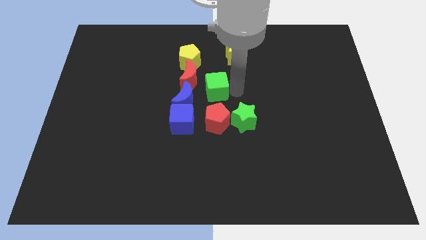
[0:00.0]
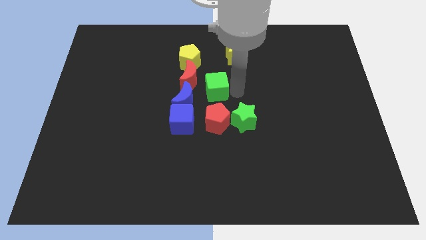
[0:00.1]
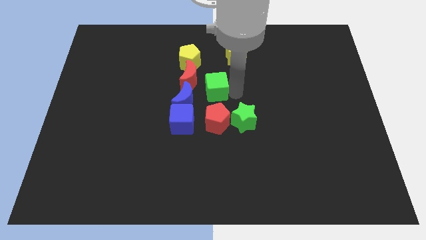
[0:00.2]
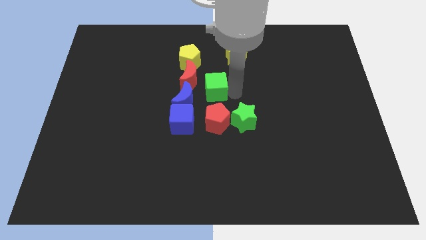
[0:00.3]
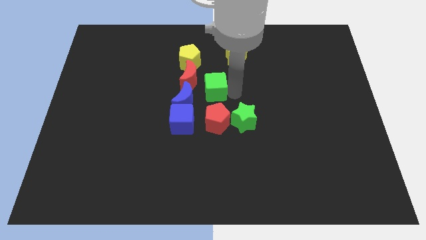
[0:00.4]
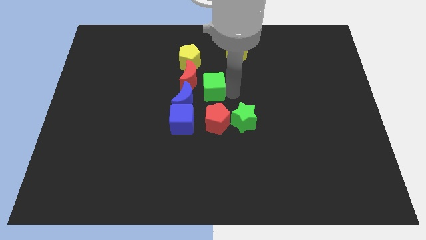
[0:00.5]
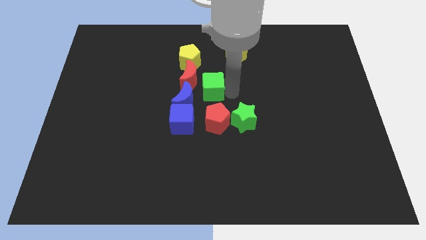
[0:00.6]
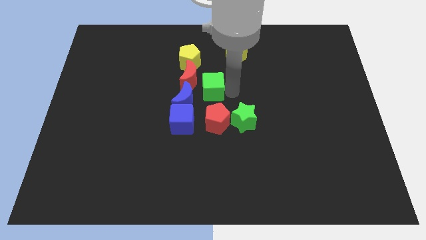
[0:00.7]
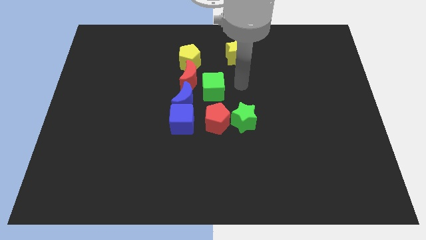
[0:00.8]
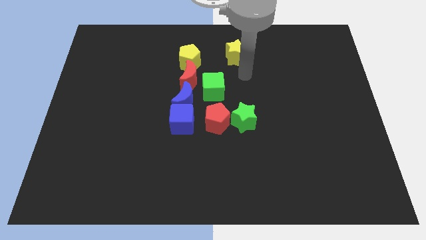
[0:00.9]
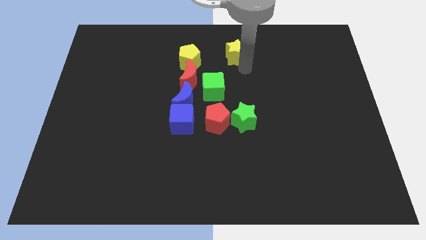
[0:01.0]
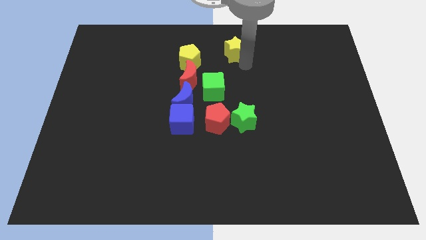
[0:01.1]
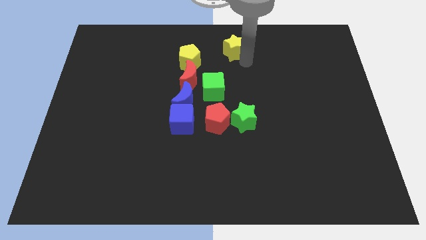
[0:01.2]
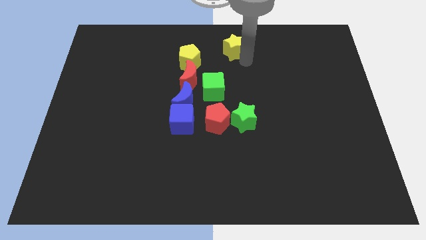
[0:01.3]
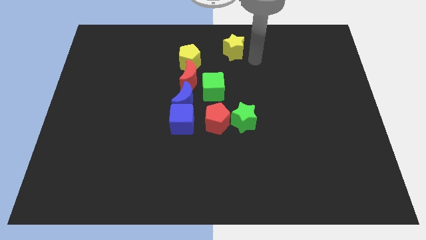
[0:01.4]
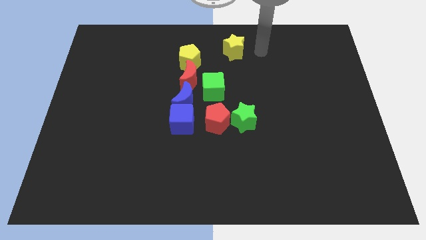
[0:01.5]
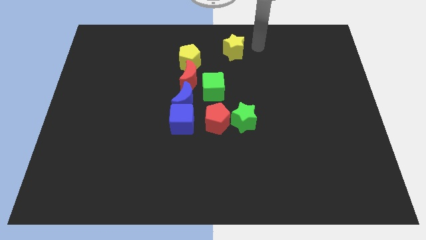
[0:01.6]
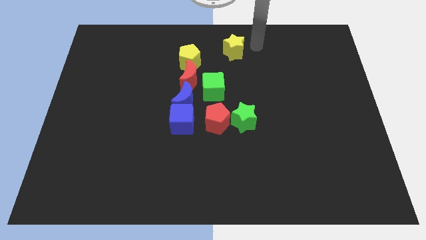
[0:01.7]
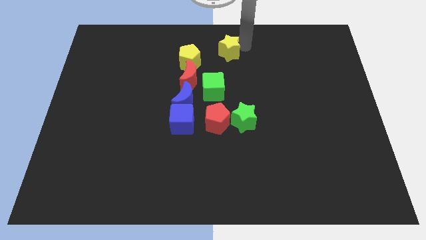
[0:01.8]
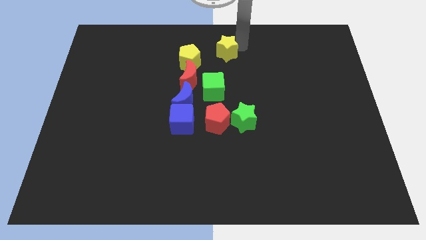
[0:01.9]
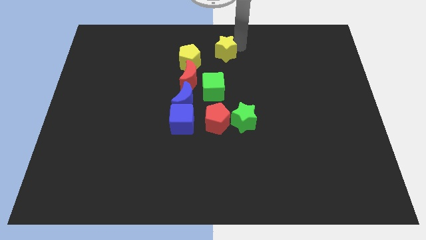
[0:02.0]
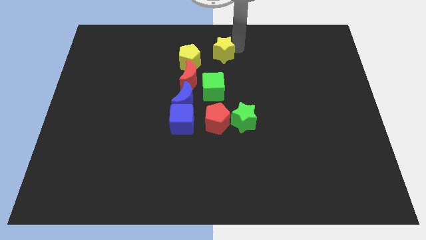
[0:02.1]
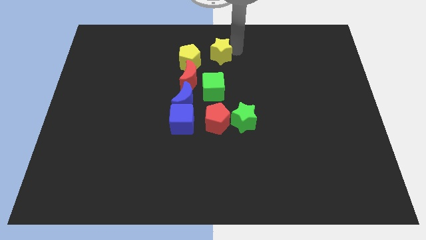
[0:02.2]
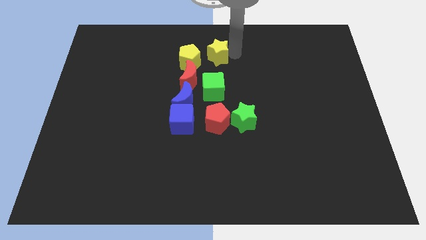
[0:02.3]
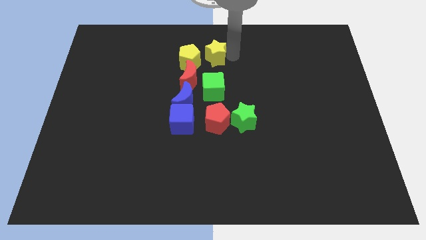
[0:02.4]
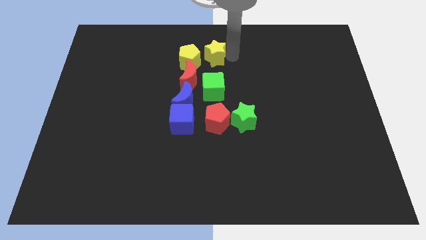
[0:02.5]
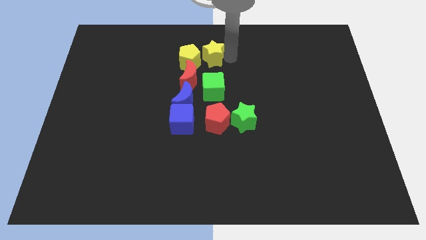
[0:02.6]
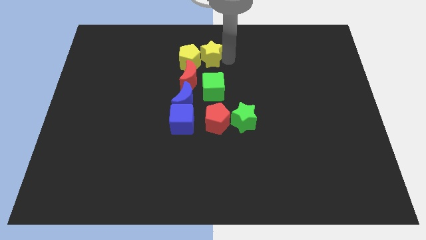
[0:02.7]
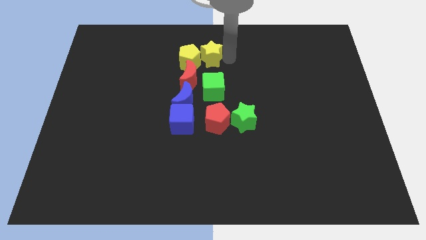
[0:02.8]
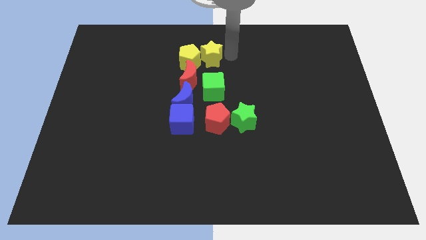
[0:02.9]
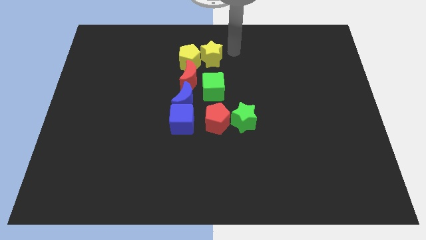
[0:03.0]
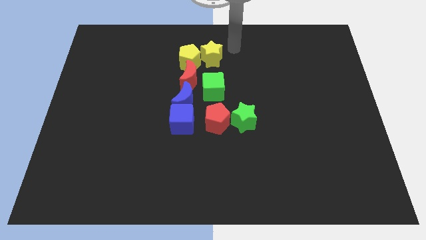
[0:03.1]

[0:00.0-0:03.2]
slide the yellow star vertically above the green cube

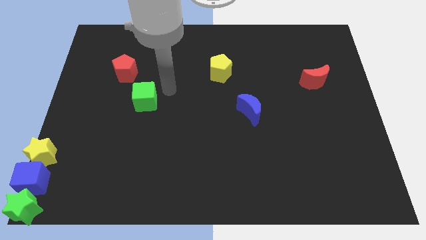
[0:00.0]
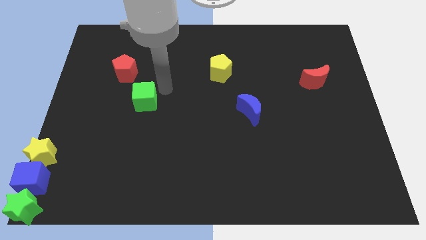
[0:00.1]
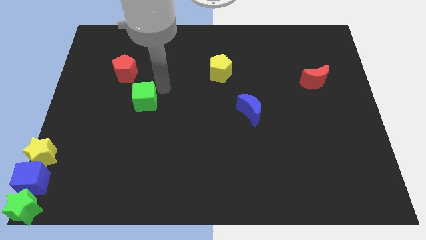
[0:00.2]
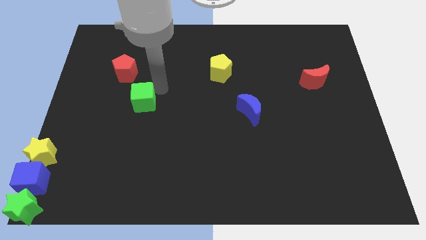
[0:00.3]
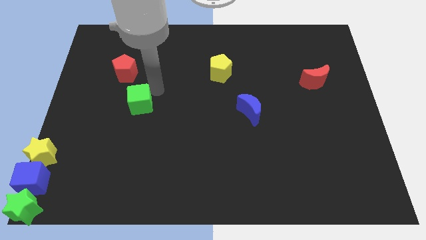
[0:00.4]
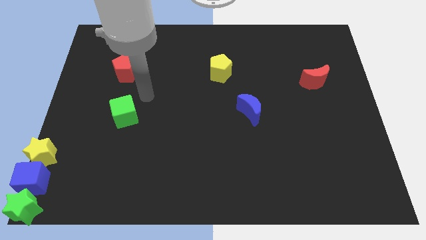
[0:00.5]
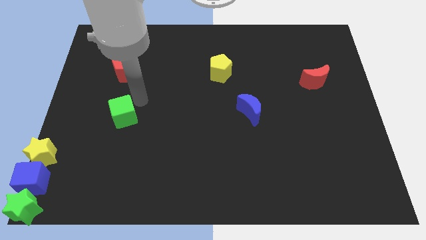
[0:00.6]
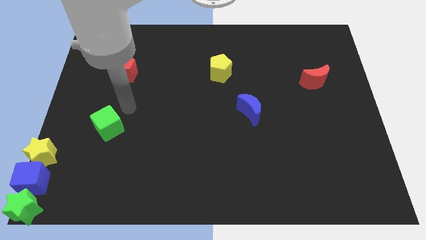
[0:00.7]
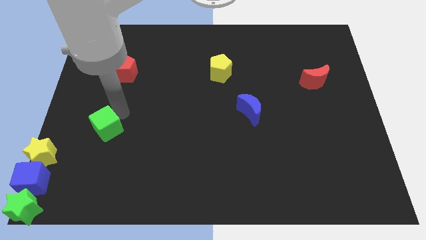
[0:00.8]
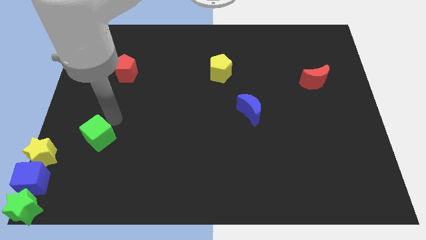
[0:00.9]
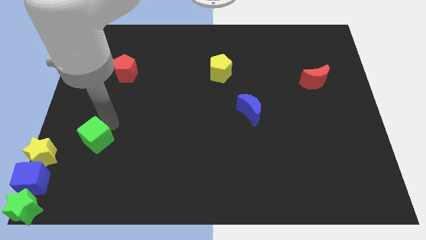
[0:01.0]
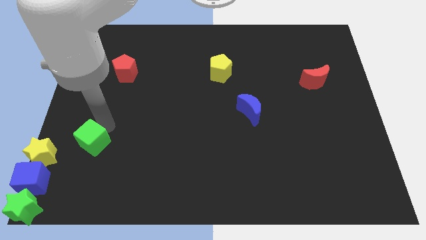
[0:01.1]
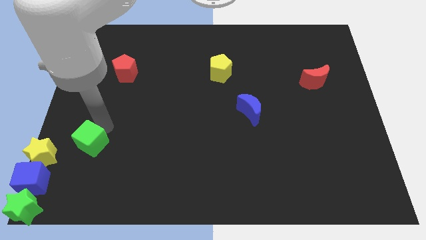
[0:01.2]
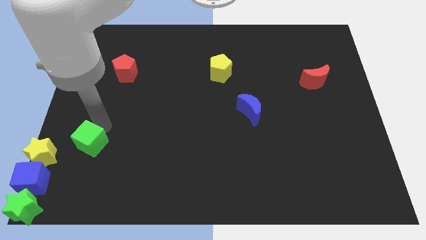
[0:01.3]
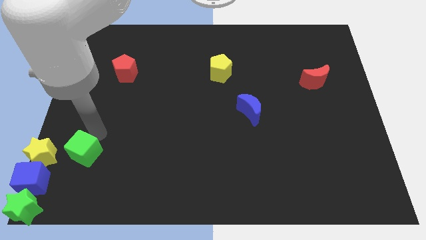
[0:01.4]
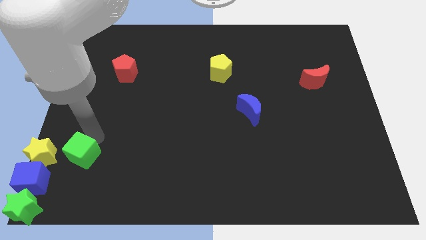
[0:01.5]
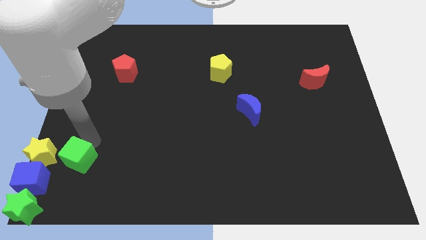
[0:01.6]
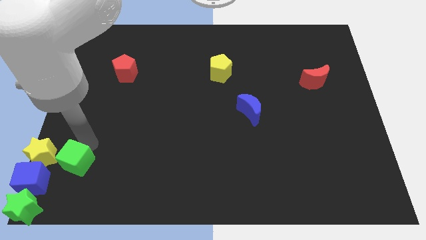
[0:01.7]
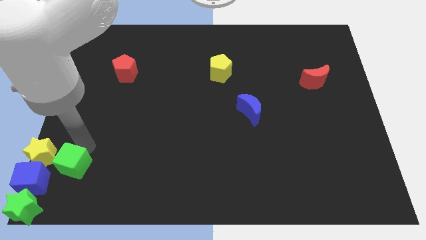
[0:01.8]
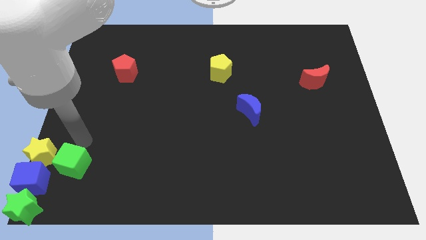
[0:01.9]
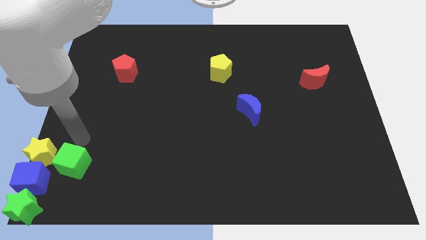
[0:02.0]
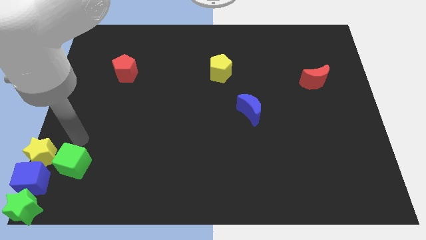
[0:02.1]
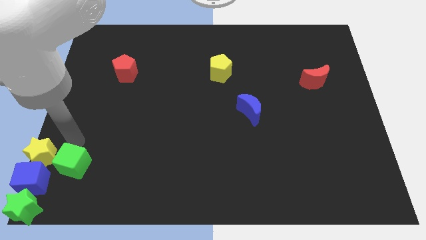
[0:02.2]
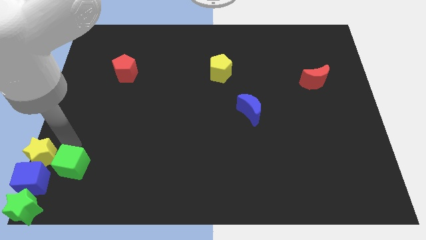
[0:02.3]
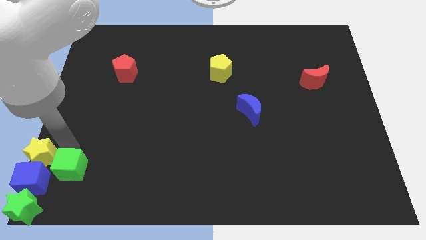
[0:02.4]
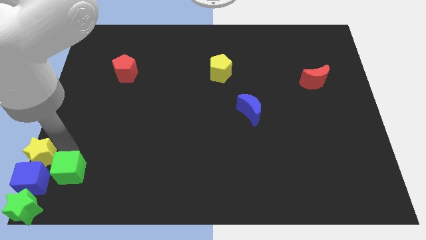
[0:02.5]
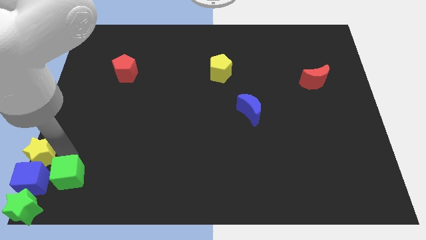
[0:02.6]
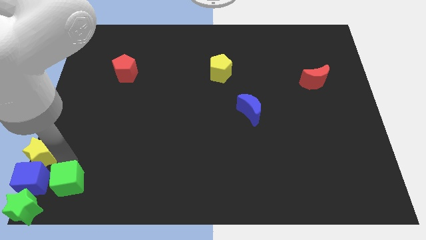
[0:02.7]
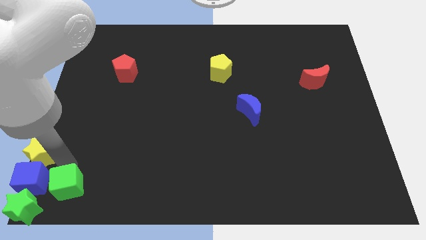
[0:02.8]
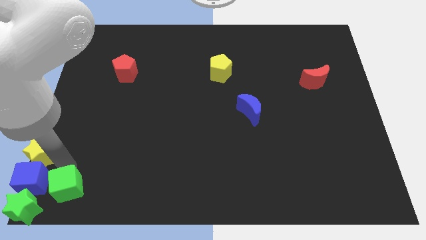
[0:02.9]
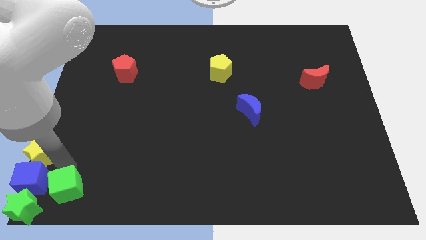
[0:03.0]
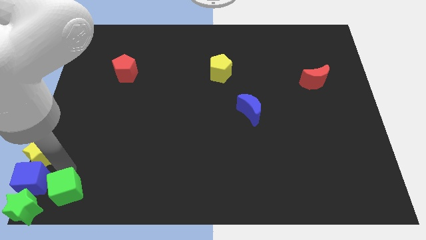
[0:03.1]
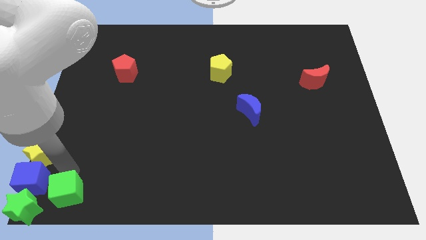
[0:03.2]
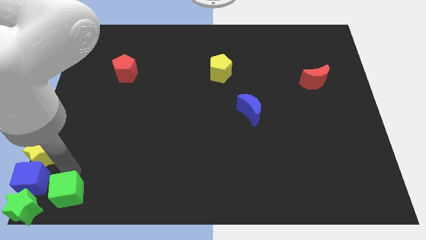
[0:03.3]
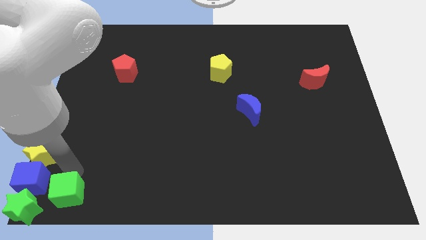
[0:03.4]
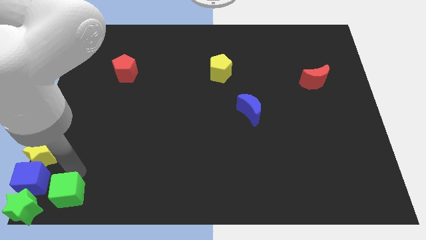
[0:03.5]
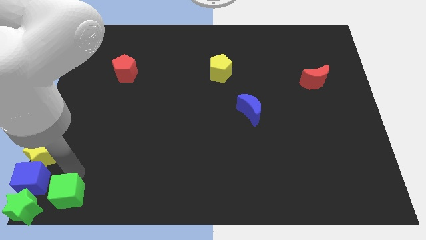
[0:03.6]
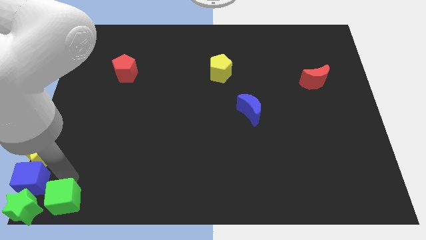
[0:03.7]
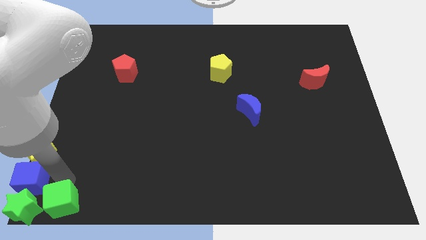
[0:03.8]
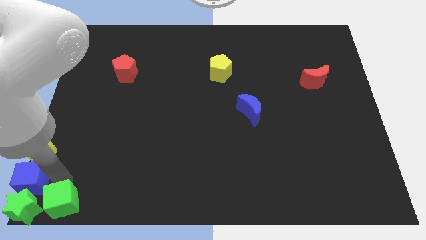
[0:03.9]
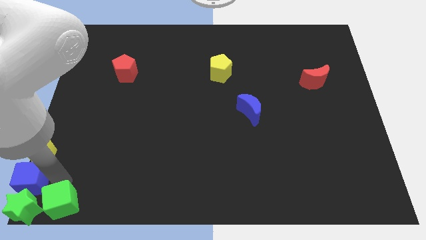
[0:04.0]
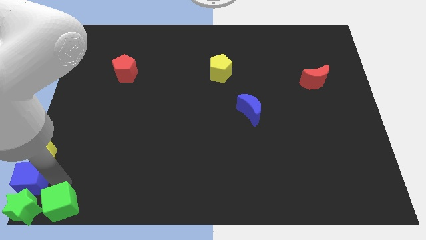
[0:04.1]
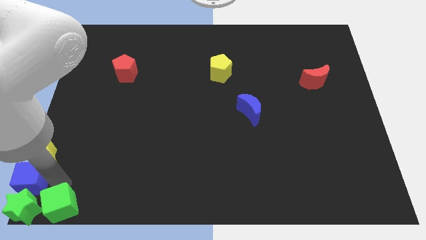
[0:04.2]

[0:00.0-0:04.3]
push green cube to bottom left of the board

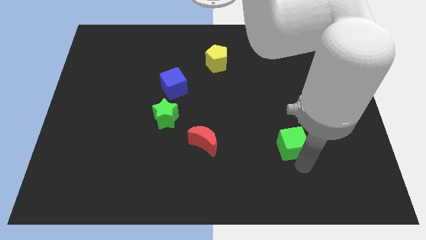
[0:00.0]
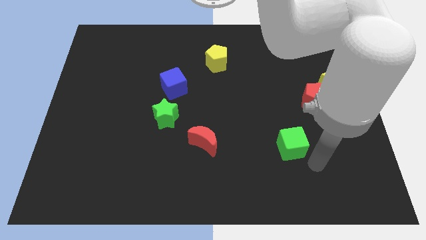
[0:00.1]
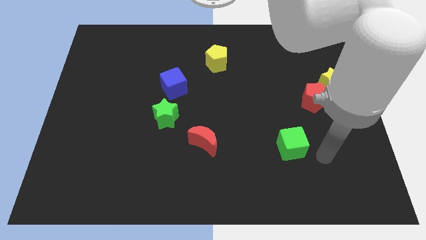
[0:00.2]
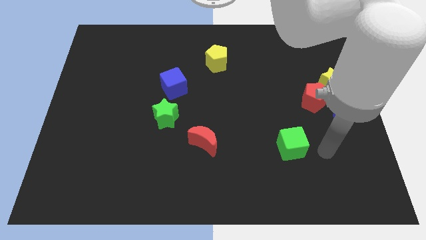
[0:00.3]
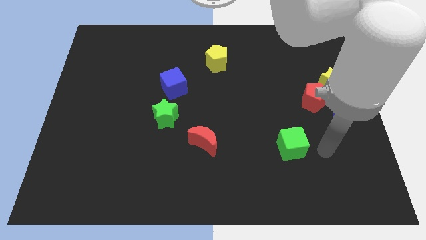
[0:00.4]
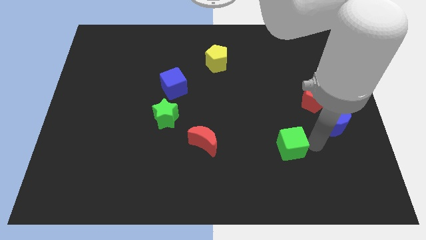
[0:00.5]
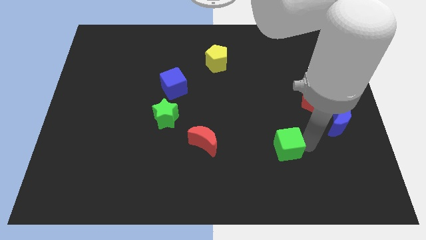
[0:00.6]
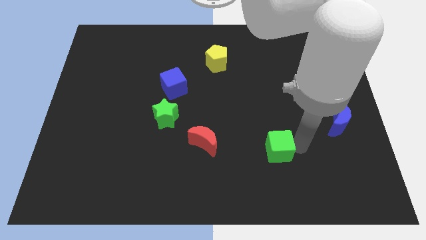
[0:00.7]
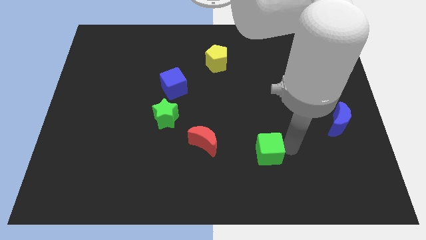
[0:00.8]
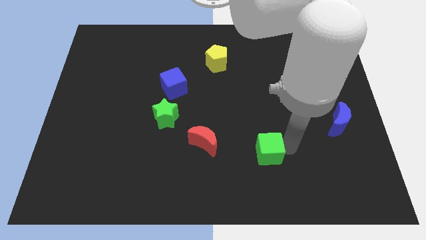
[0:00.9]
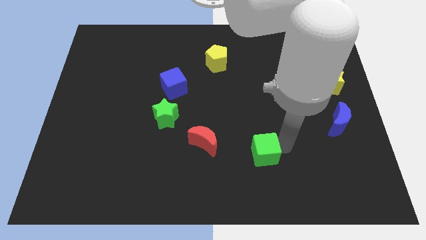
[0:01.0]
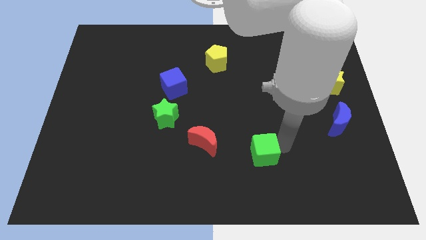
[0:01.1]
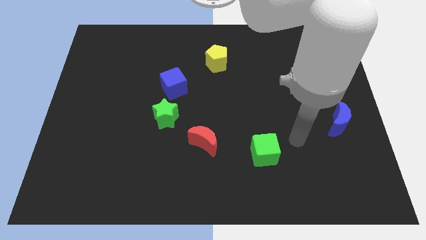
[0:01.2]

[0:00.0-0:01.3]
move the green cube to the left
